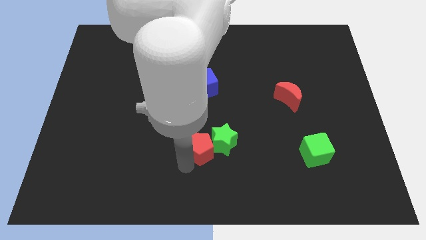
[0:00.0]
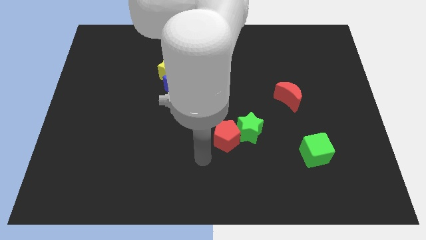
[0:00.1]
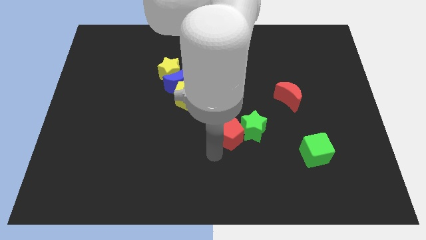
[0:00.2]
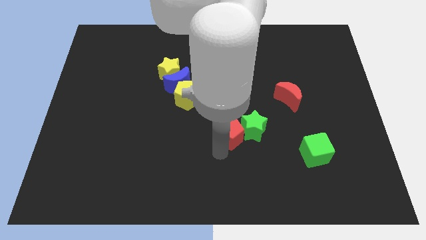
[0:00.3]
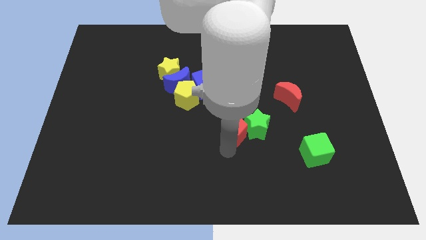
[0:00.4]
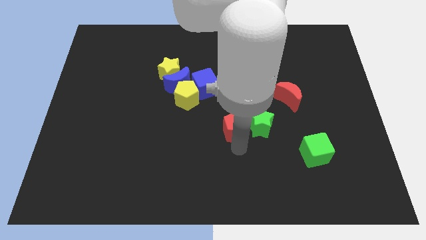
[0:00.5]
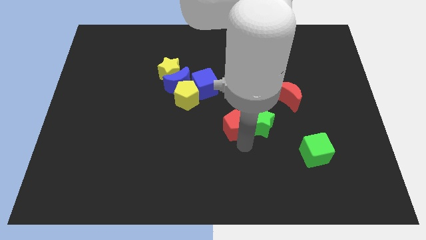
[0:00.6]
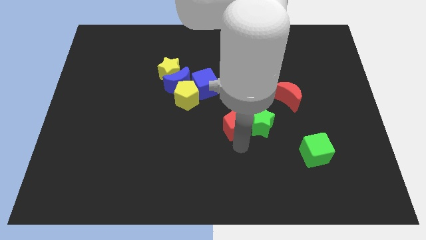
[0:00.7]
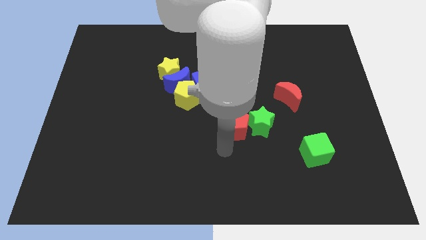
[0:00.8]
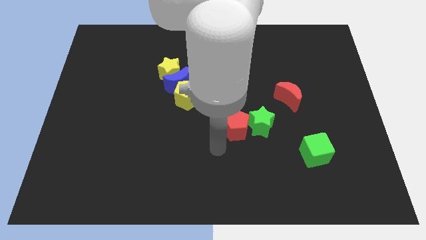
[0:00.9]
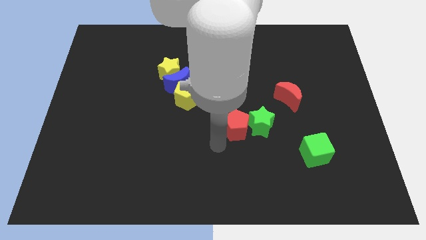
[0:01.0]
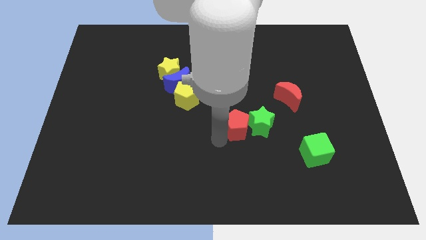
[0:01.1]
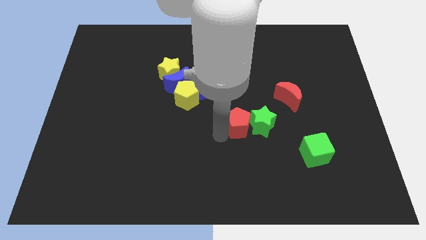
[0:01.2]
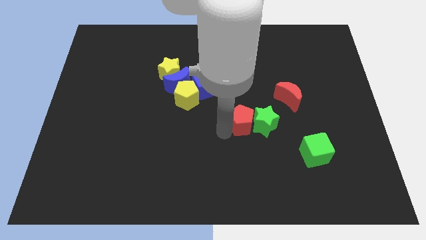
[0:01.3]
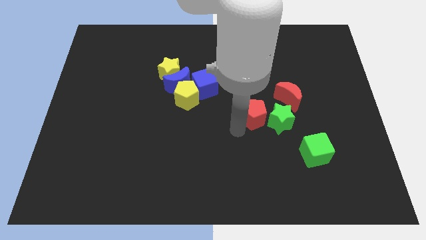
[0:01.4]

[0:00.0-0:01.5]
push the green star with the red pentagon towards the right side of the board

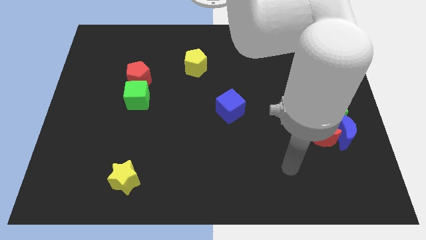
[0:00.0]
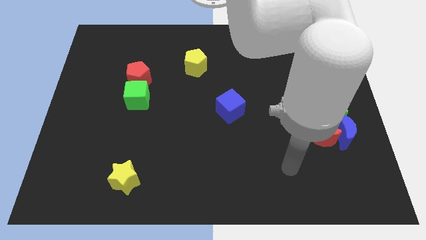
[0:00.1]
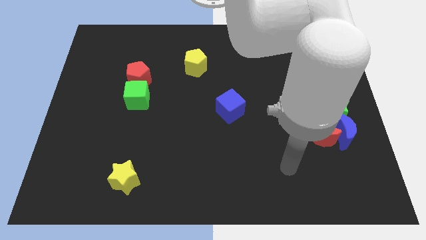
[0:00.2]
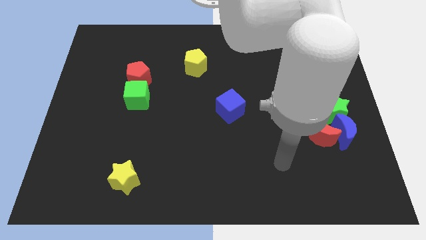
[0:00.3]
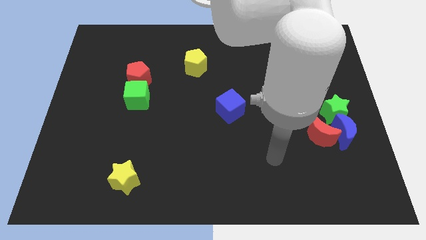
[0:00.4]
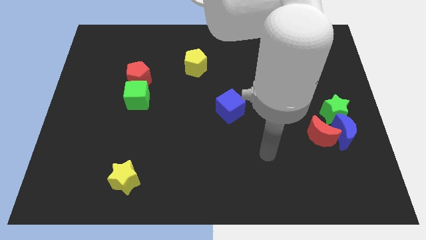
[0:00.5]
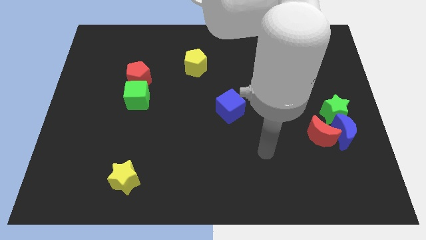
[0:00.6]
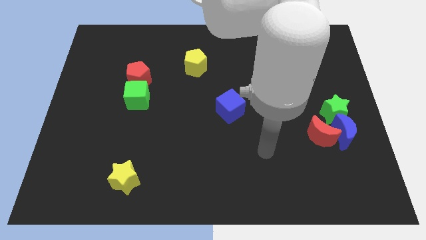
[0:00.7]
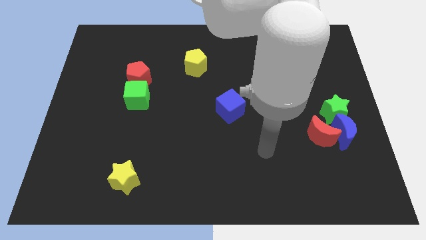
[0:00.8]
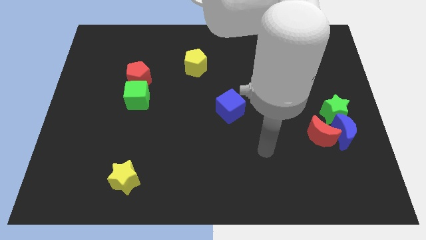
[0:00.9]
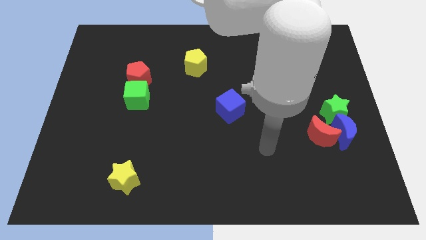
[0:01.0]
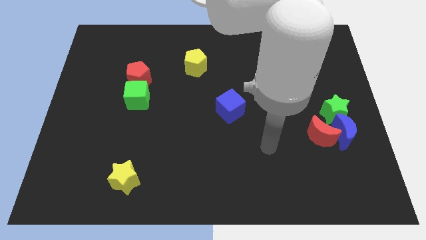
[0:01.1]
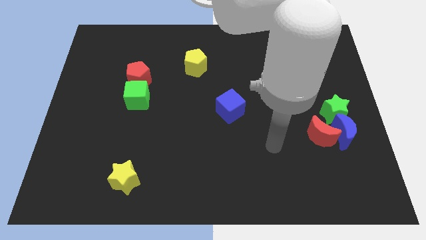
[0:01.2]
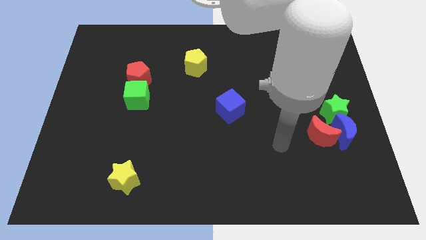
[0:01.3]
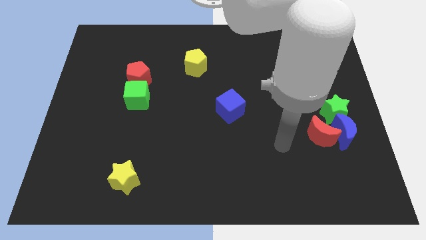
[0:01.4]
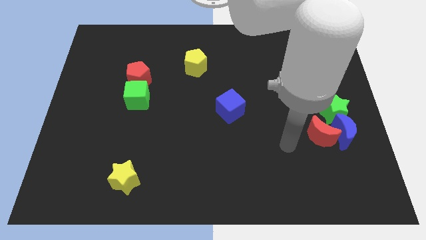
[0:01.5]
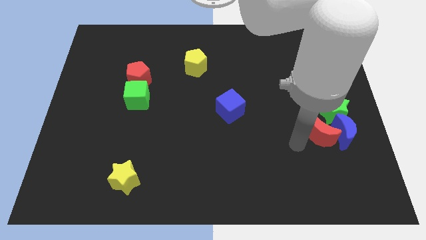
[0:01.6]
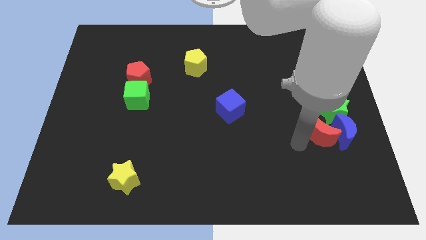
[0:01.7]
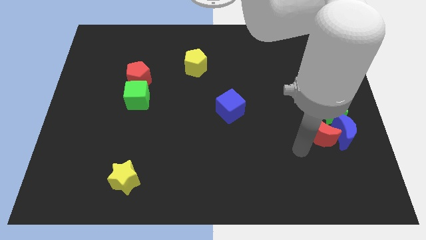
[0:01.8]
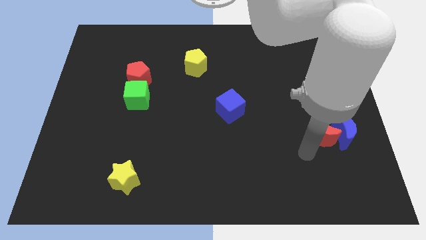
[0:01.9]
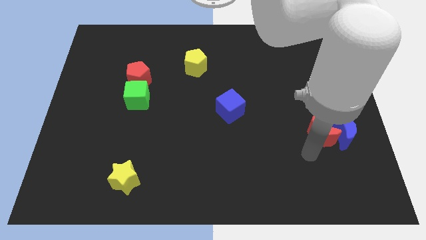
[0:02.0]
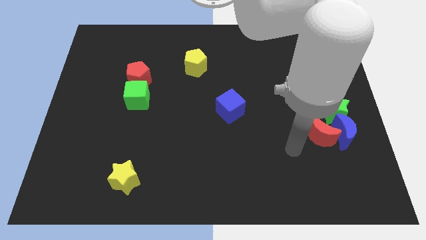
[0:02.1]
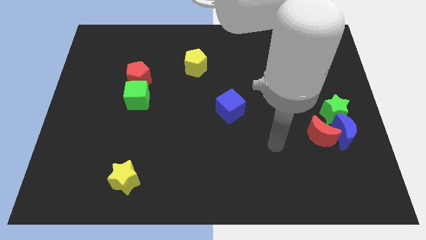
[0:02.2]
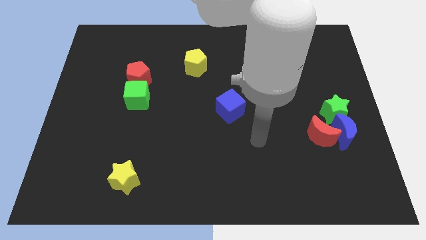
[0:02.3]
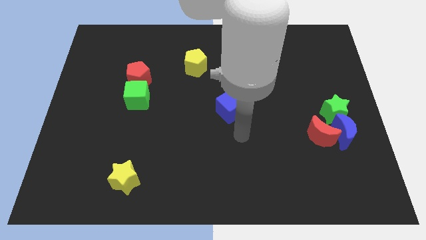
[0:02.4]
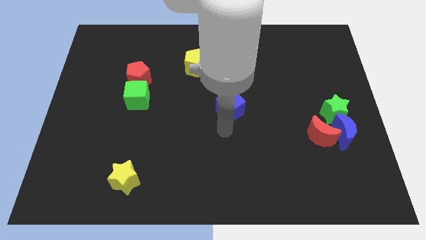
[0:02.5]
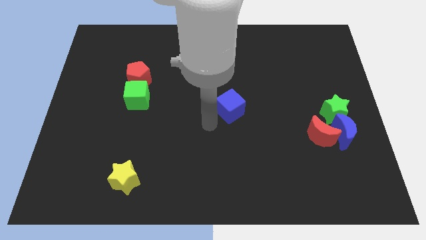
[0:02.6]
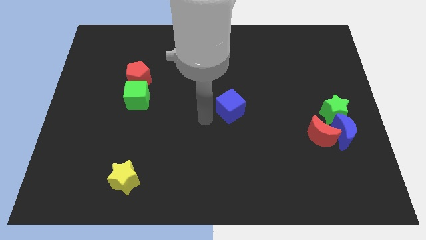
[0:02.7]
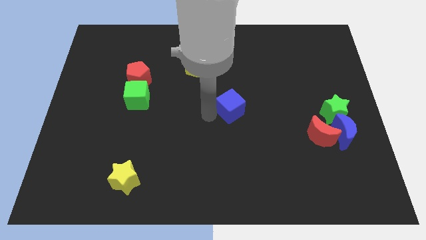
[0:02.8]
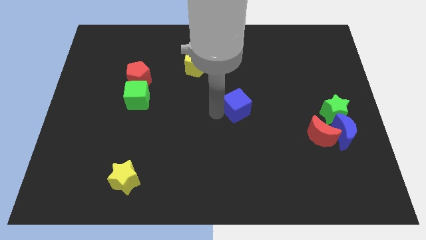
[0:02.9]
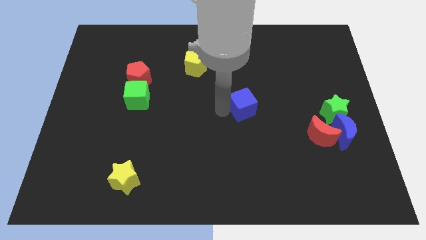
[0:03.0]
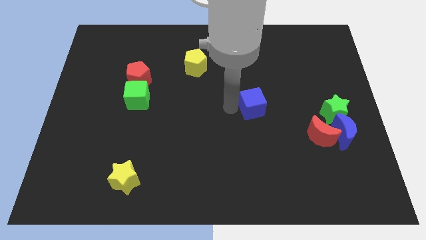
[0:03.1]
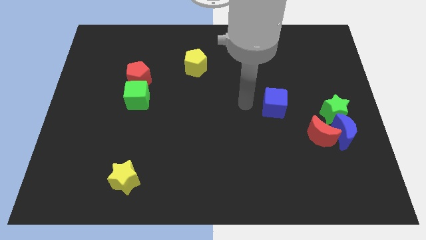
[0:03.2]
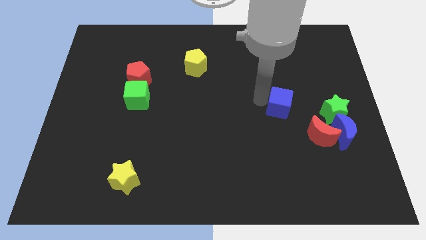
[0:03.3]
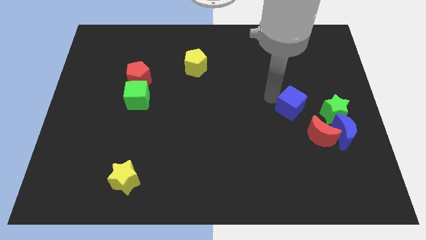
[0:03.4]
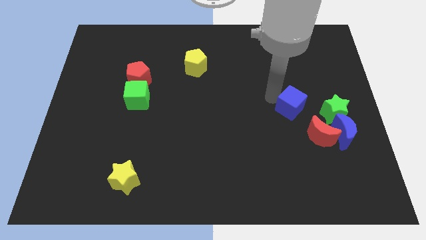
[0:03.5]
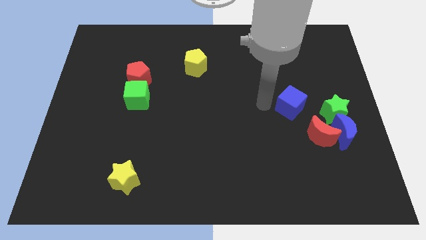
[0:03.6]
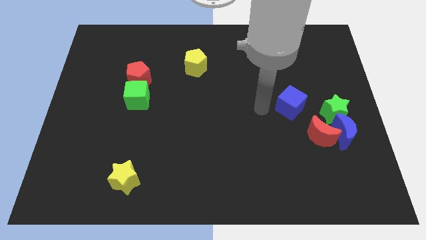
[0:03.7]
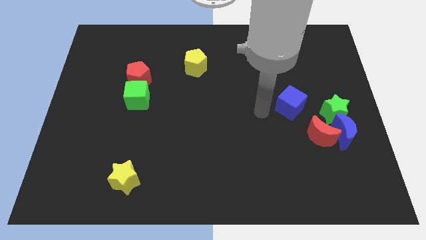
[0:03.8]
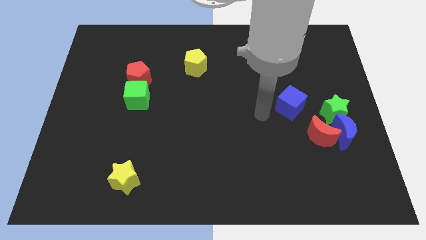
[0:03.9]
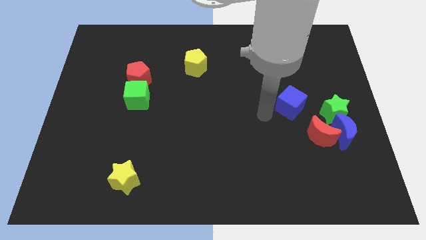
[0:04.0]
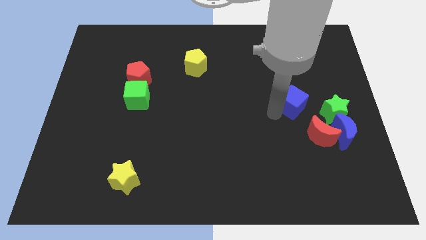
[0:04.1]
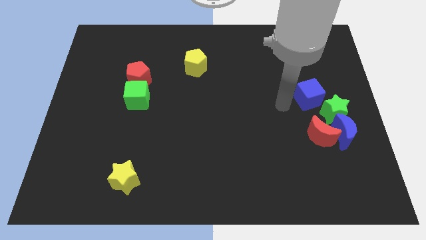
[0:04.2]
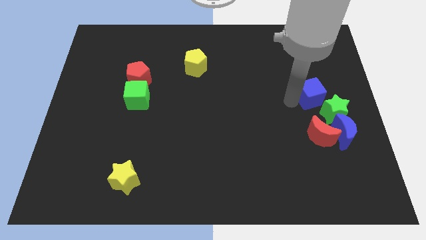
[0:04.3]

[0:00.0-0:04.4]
place the blue cube above the green star

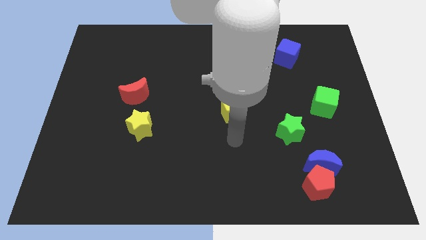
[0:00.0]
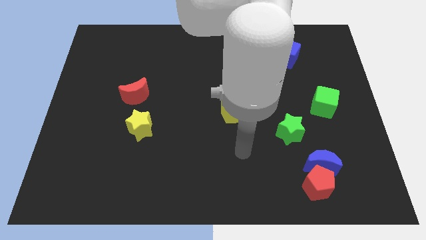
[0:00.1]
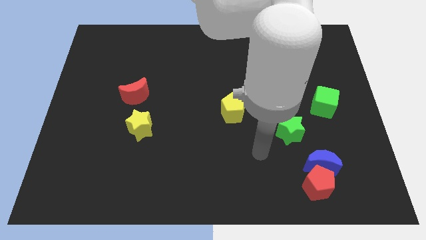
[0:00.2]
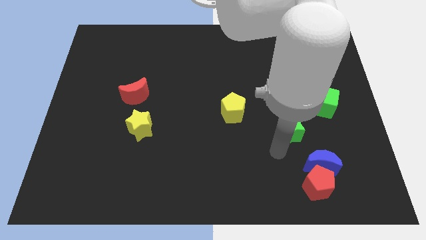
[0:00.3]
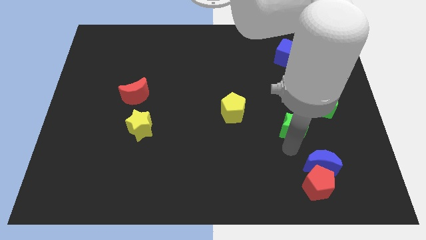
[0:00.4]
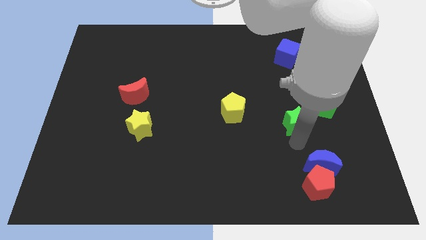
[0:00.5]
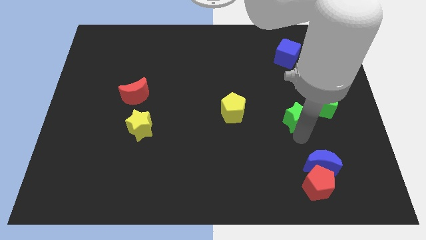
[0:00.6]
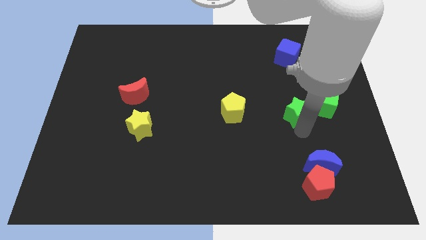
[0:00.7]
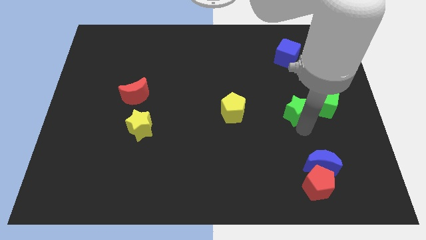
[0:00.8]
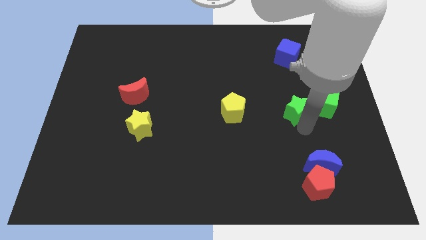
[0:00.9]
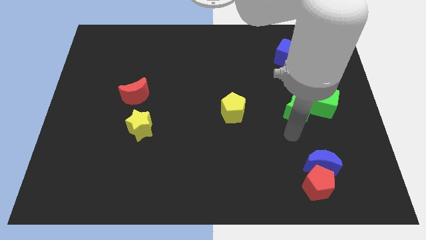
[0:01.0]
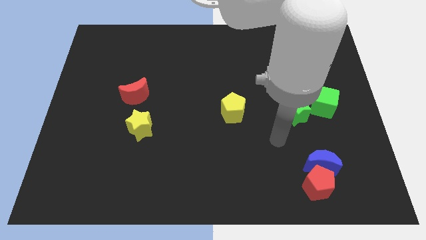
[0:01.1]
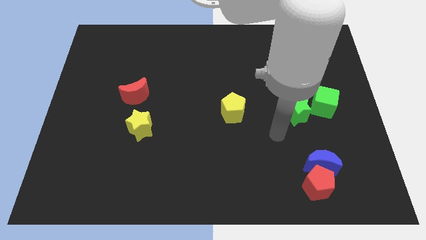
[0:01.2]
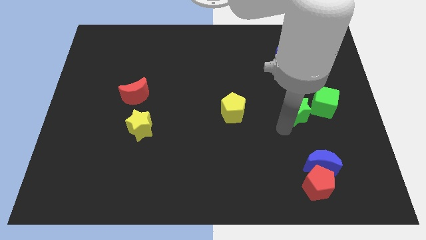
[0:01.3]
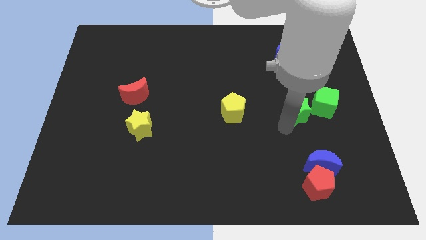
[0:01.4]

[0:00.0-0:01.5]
move the green star towards the green cube

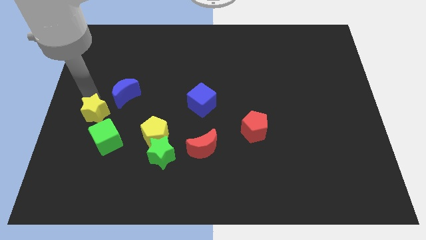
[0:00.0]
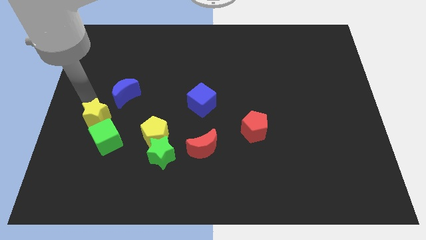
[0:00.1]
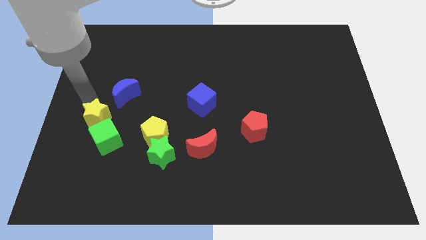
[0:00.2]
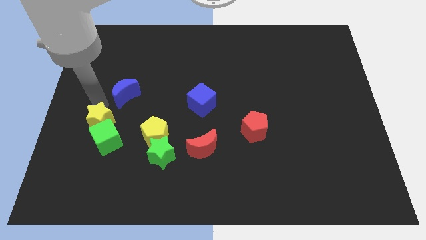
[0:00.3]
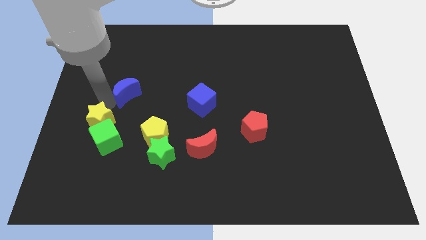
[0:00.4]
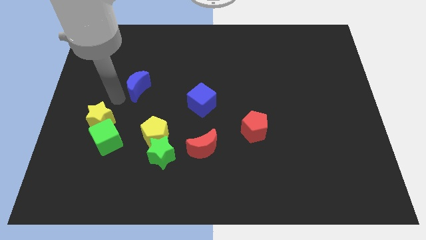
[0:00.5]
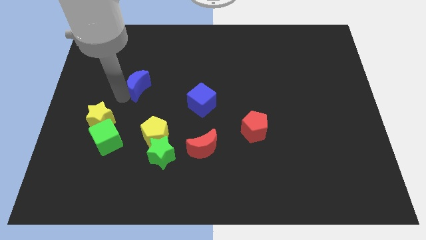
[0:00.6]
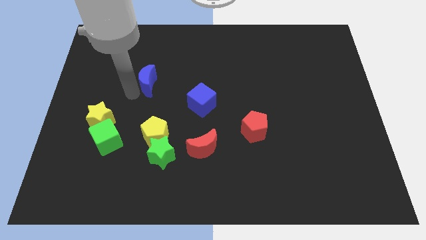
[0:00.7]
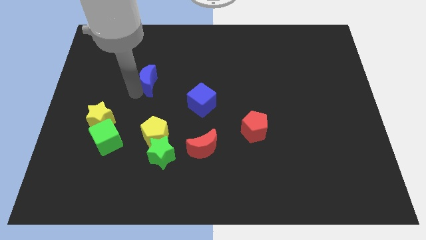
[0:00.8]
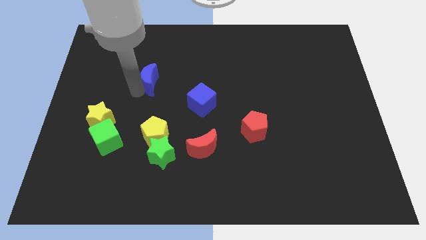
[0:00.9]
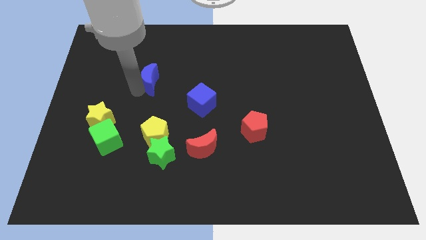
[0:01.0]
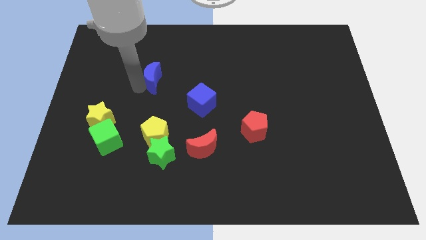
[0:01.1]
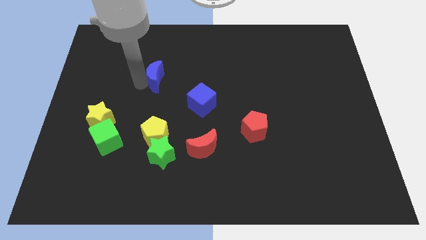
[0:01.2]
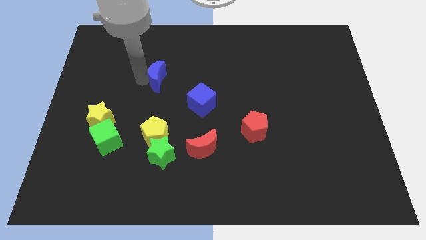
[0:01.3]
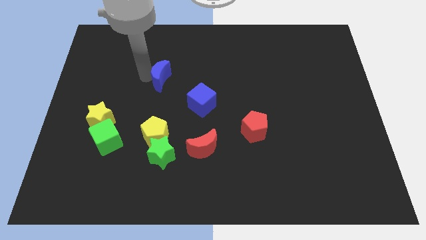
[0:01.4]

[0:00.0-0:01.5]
separate the blue moon from the yellow star
